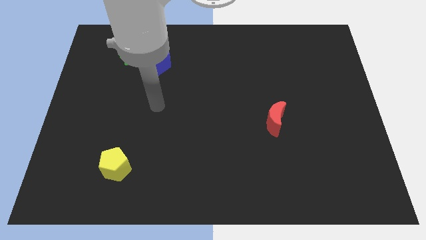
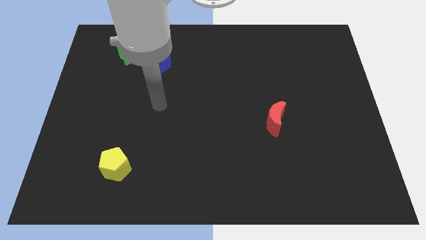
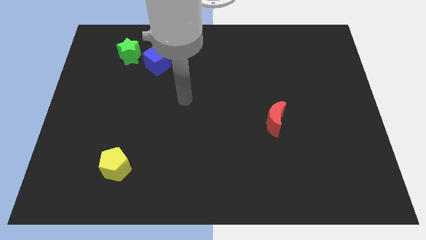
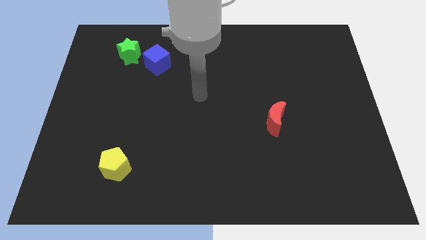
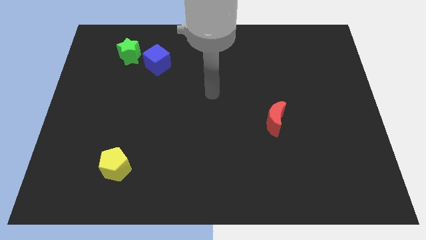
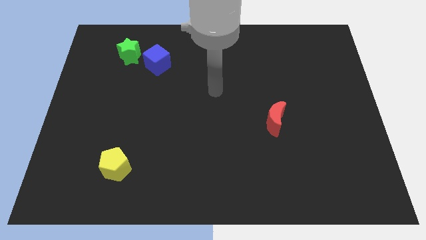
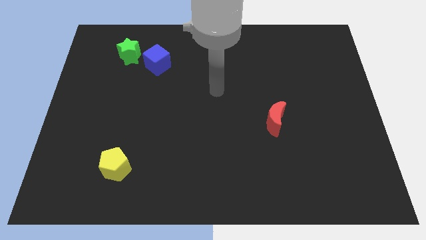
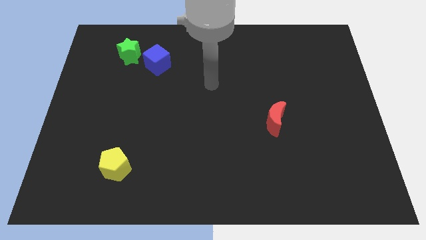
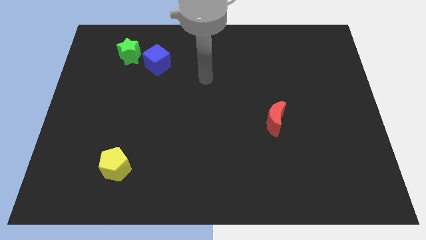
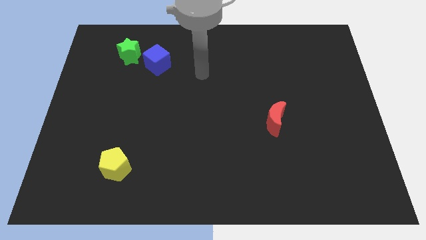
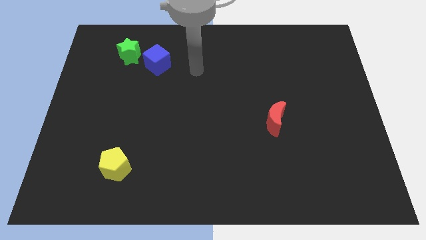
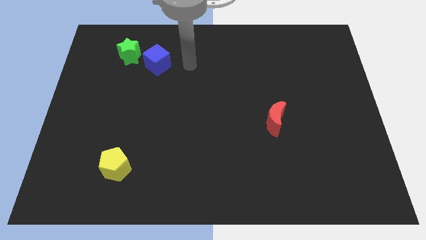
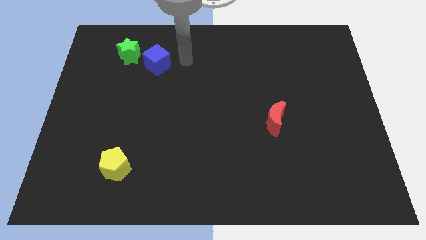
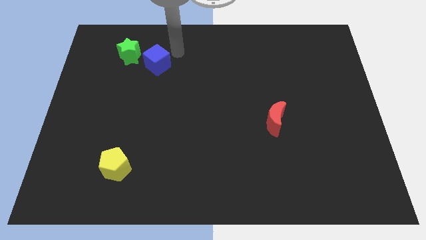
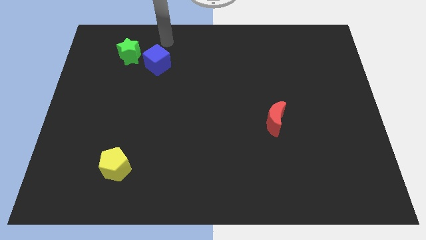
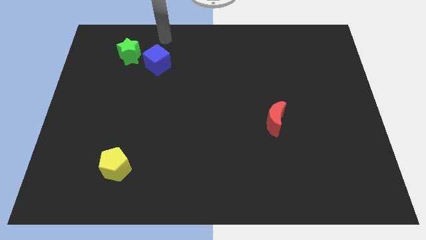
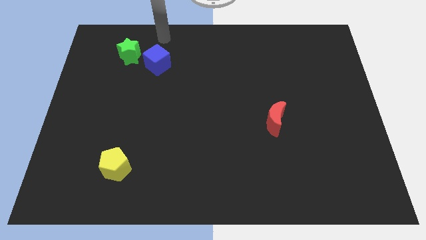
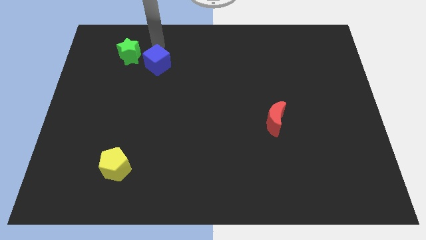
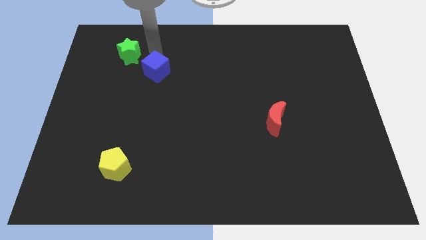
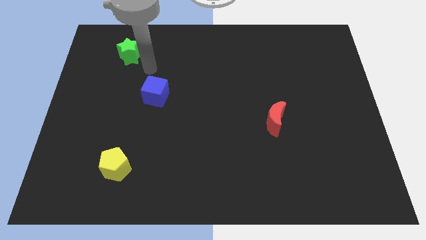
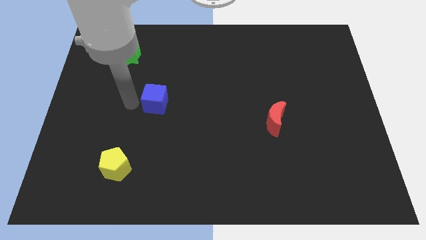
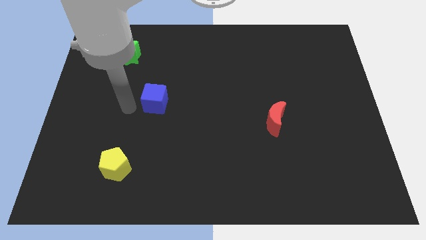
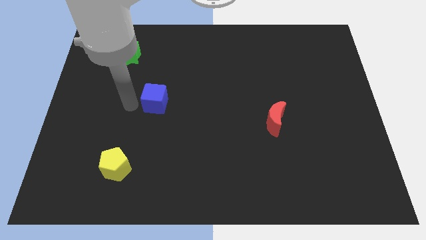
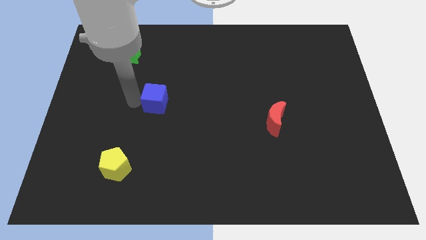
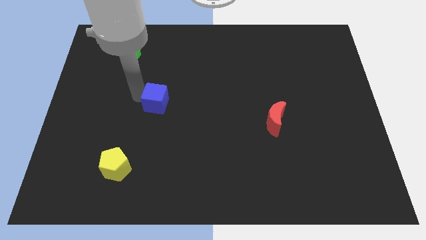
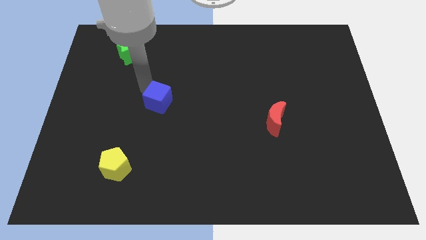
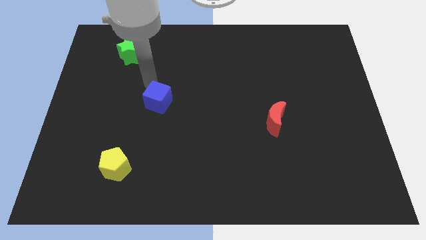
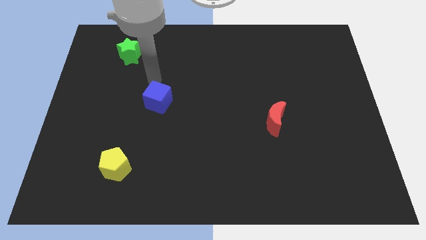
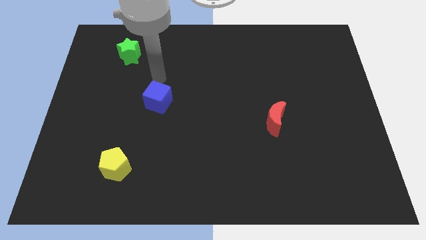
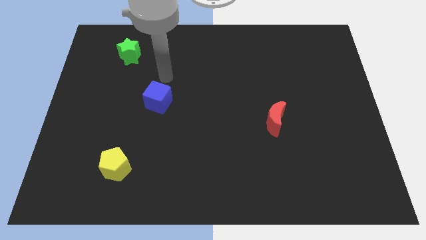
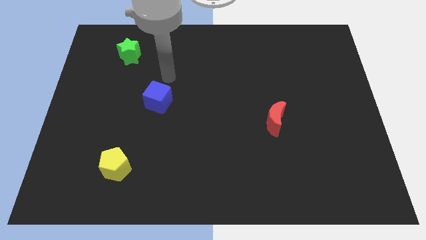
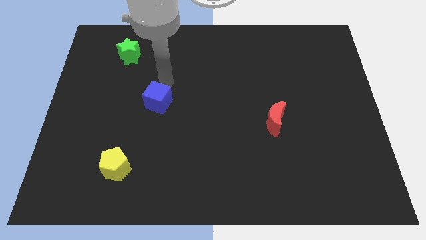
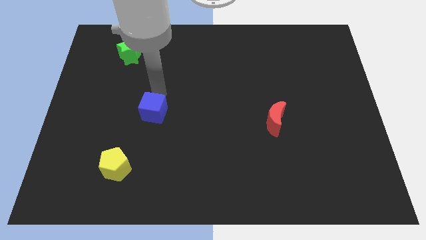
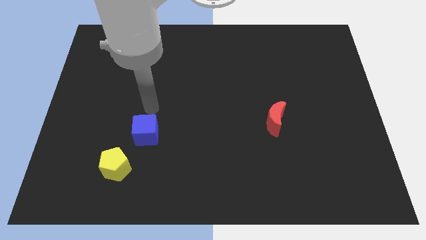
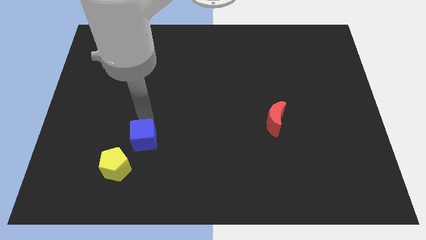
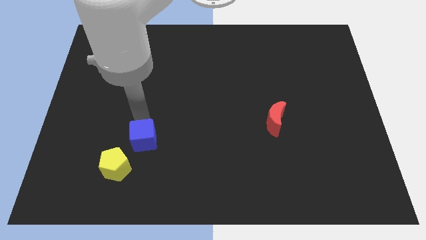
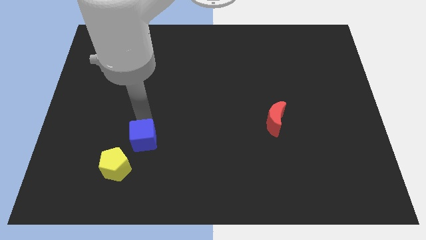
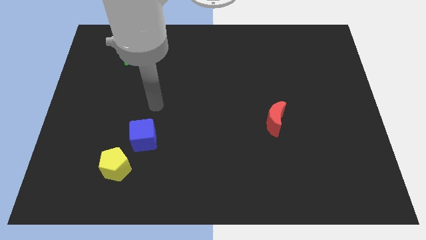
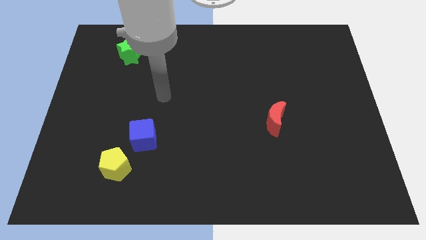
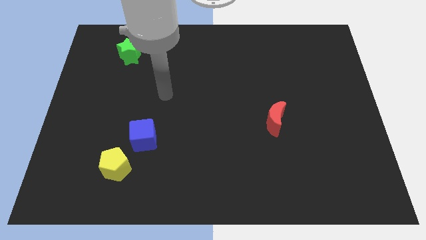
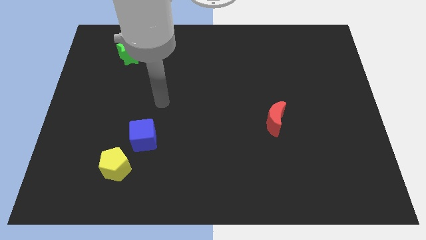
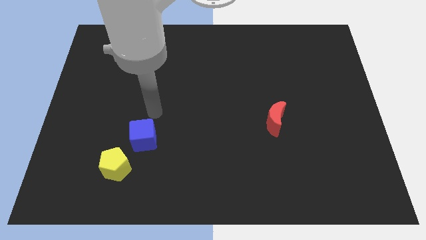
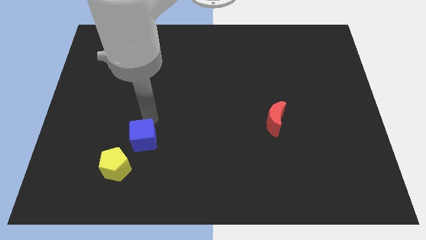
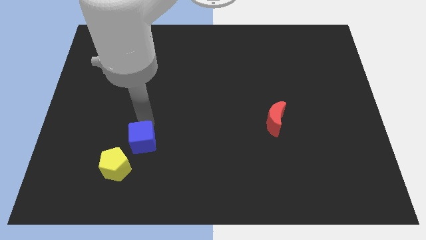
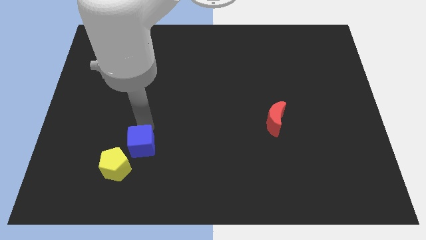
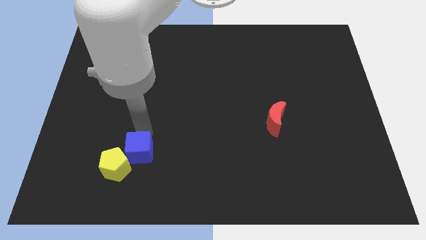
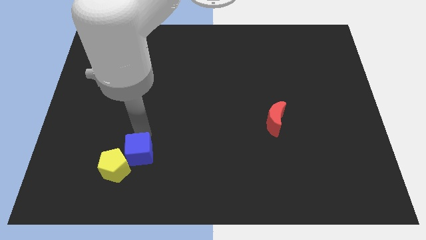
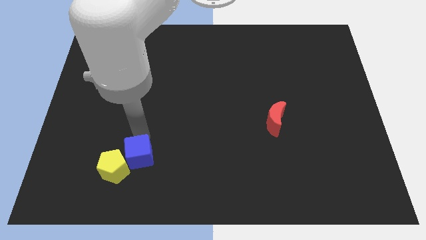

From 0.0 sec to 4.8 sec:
push the blue cube close to the yellow block

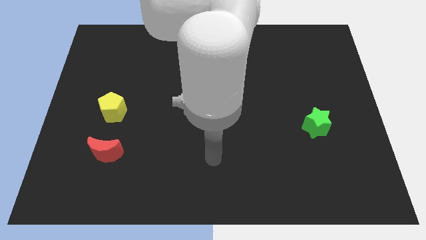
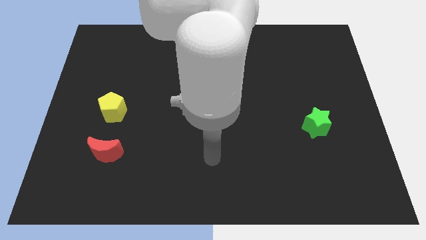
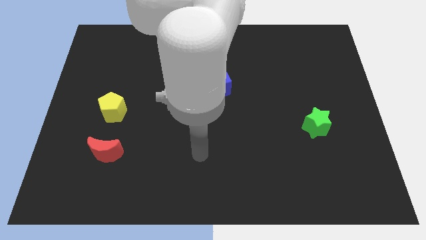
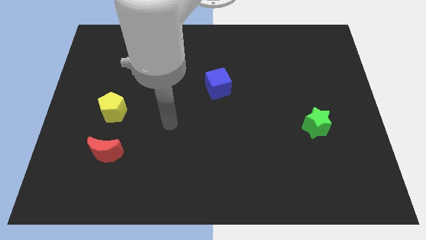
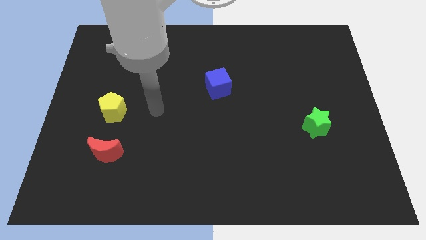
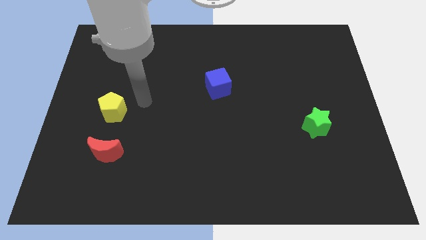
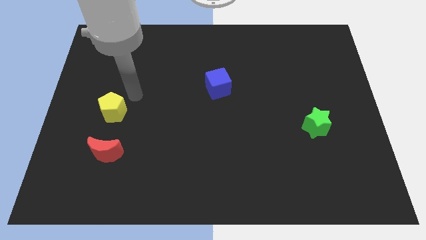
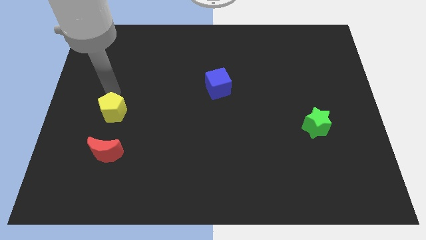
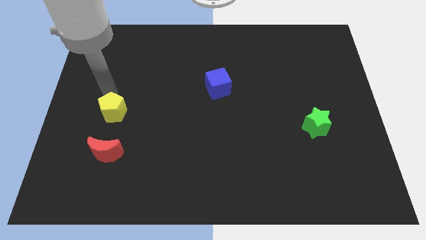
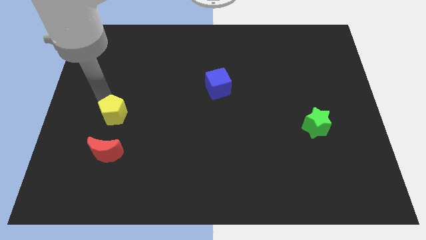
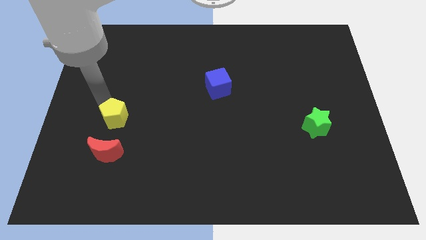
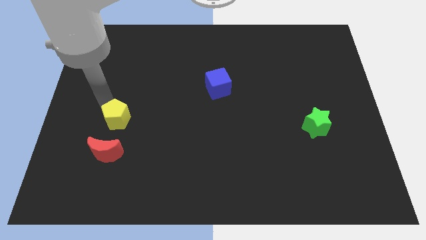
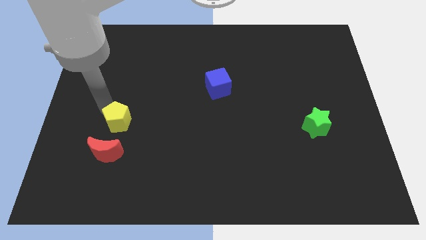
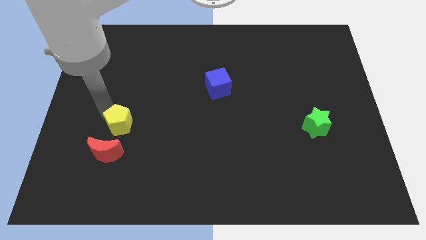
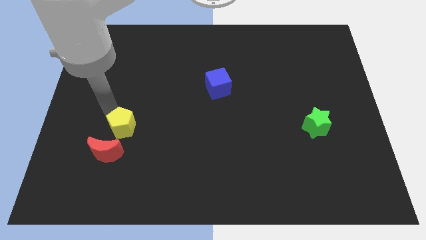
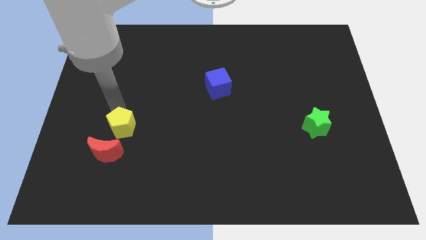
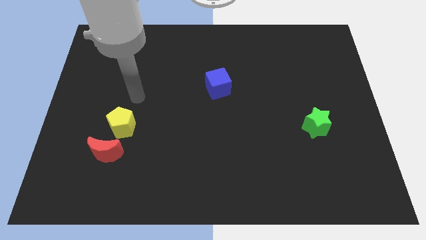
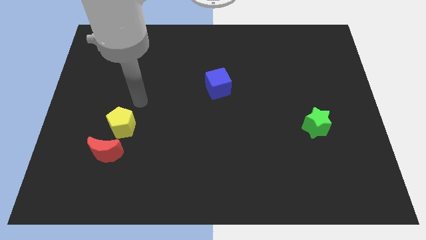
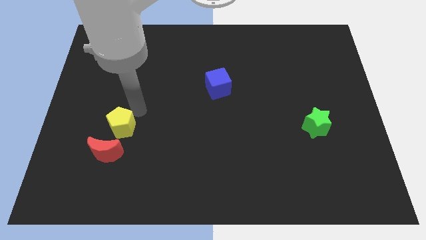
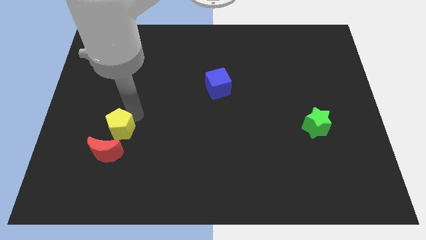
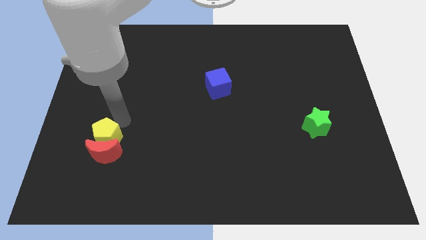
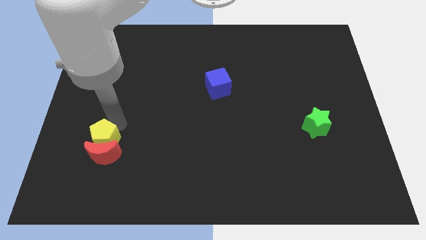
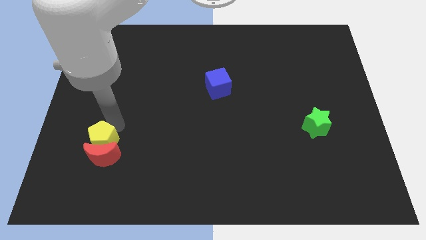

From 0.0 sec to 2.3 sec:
push the pentagon towards the moon

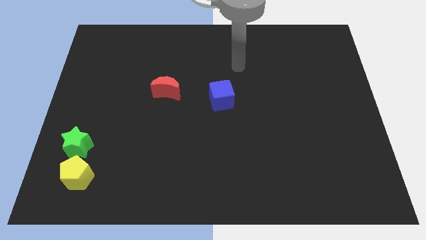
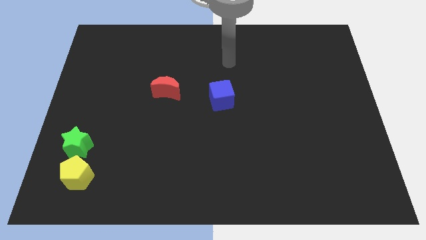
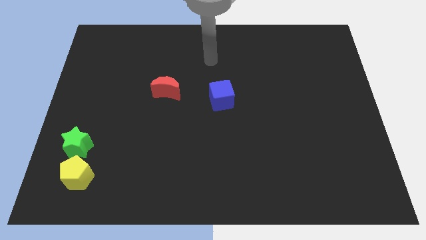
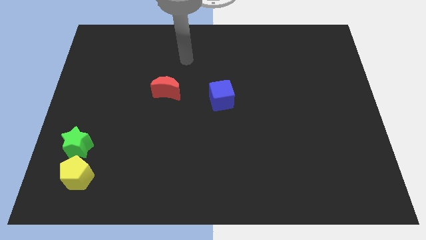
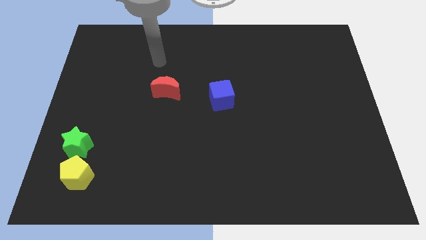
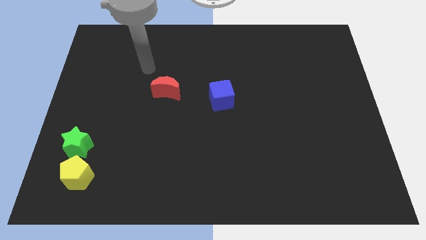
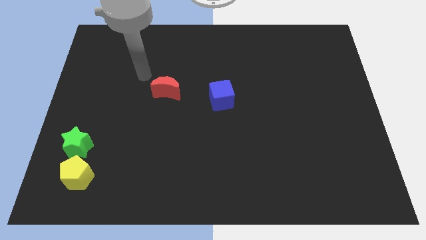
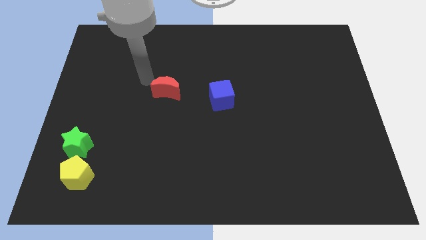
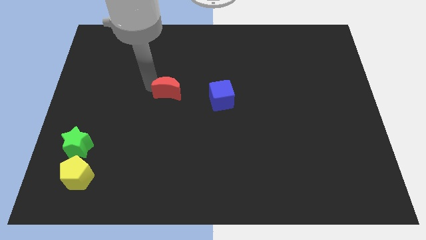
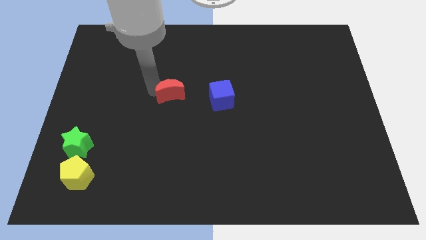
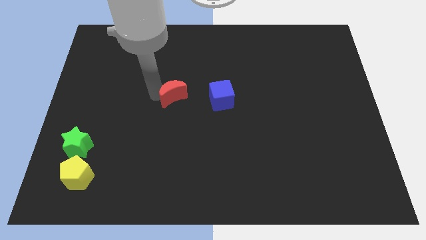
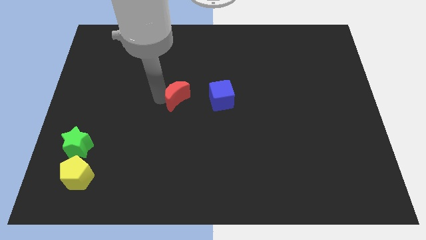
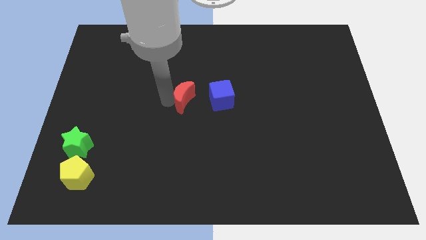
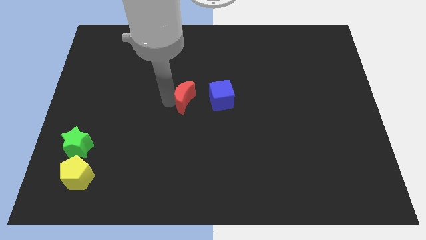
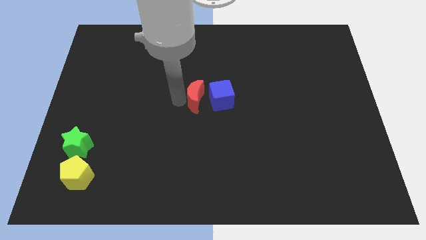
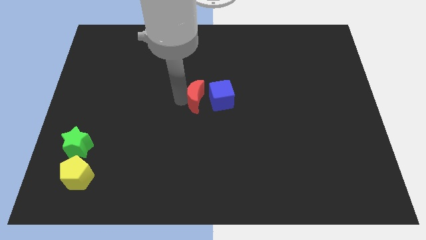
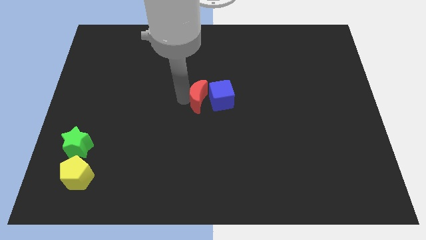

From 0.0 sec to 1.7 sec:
move the moon to the cube
